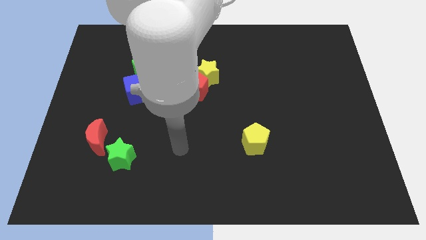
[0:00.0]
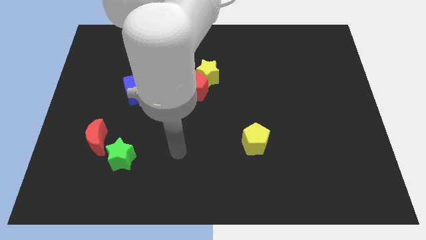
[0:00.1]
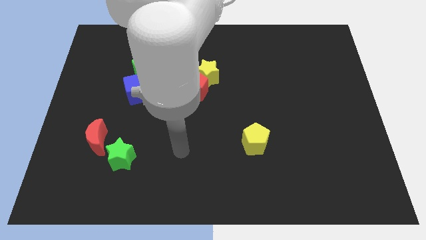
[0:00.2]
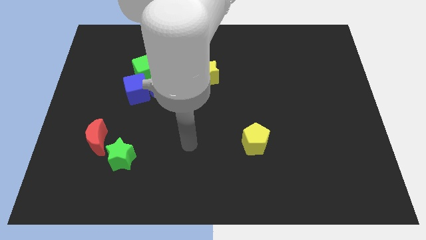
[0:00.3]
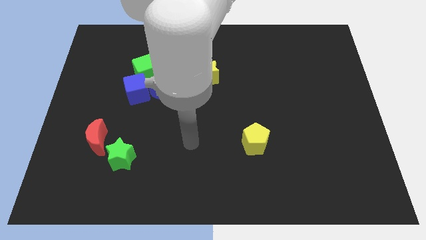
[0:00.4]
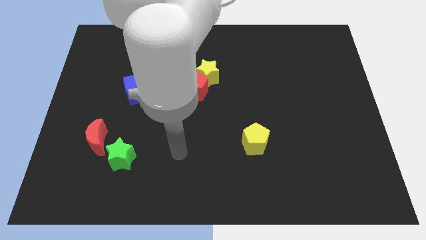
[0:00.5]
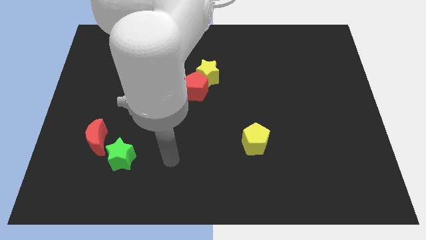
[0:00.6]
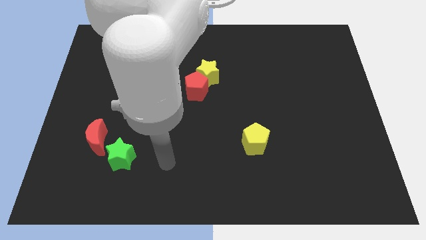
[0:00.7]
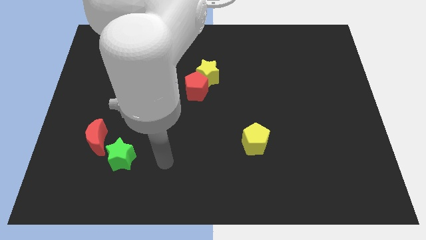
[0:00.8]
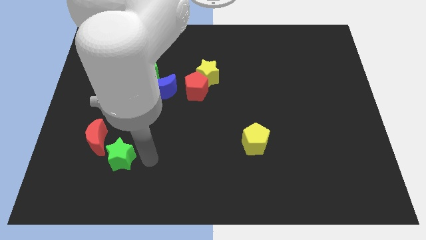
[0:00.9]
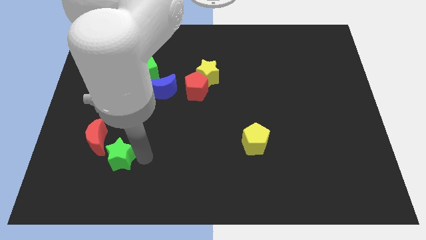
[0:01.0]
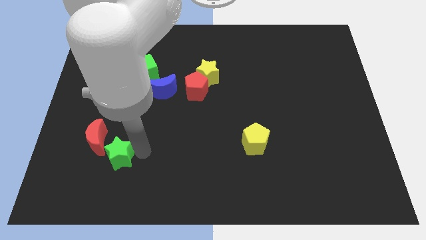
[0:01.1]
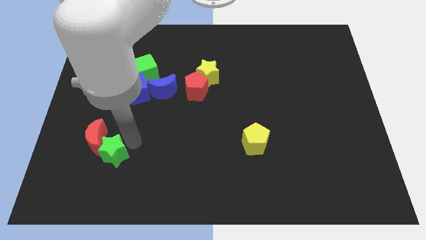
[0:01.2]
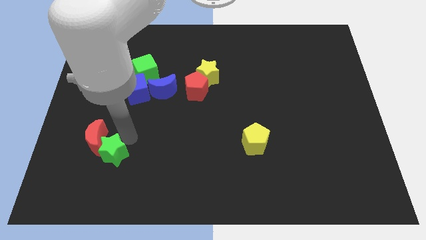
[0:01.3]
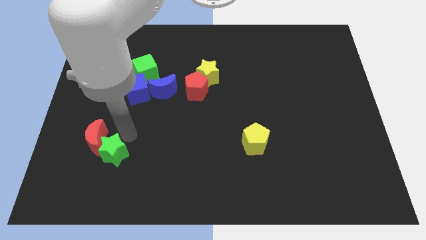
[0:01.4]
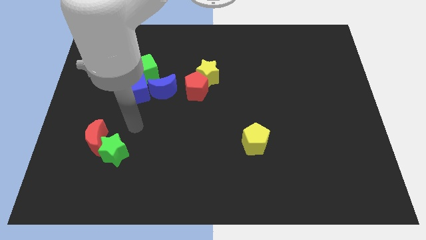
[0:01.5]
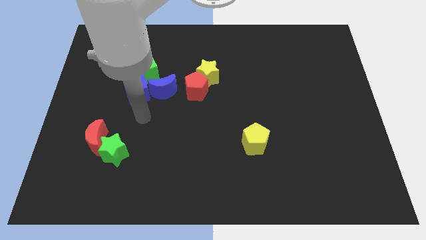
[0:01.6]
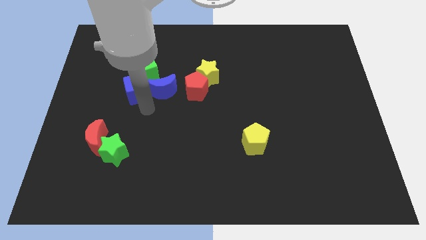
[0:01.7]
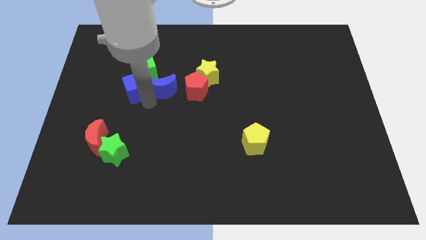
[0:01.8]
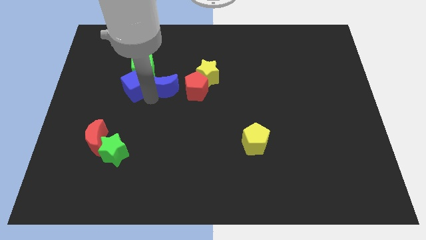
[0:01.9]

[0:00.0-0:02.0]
place the arm below the blue crescent

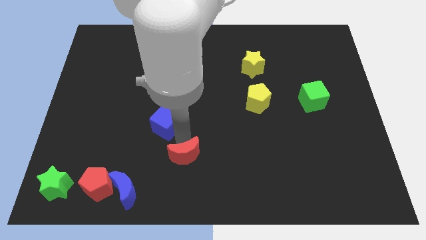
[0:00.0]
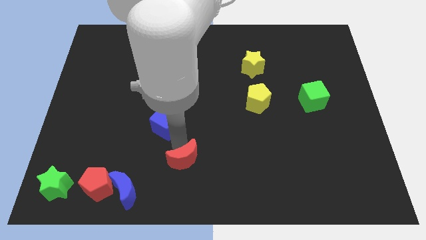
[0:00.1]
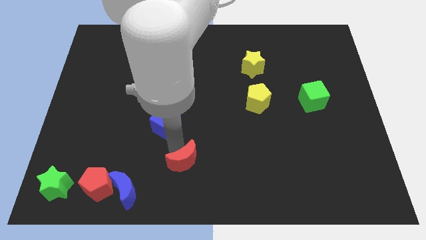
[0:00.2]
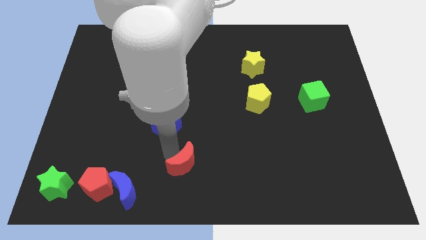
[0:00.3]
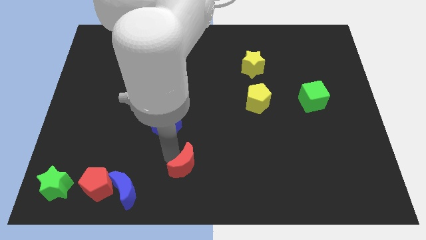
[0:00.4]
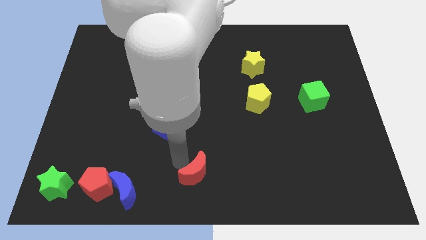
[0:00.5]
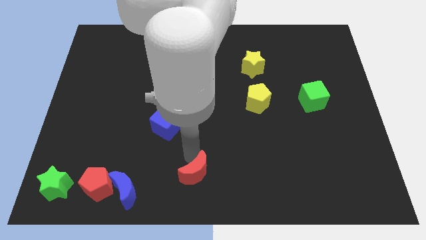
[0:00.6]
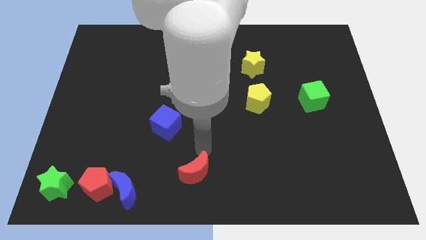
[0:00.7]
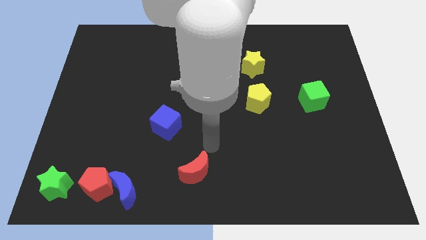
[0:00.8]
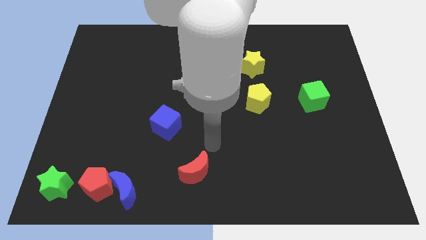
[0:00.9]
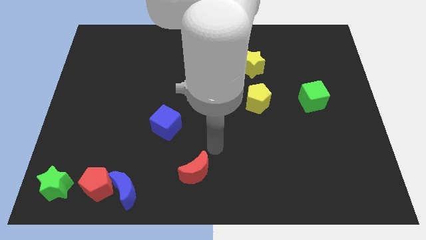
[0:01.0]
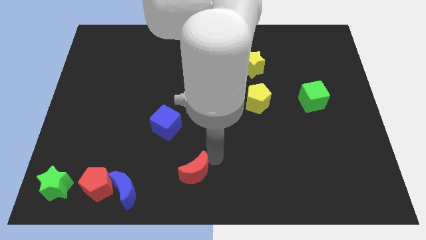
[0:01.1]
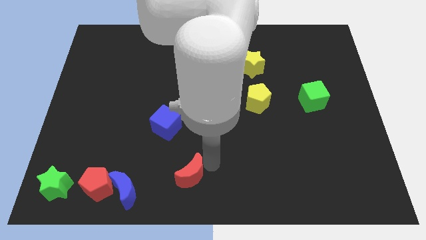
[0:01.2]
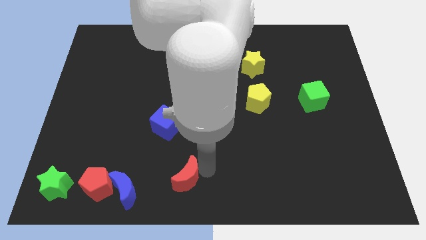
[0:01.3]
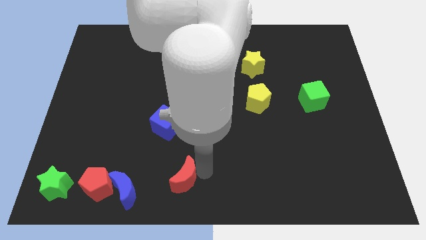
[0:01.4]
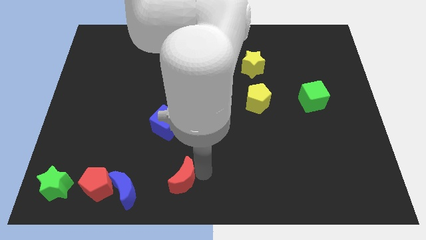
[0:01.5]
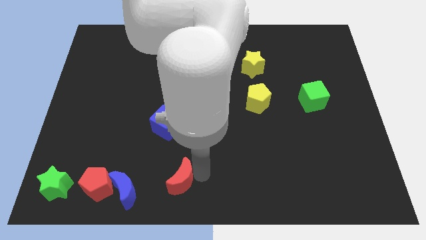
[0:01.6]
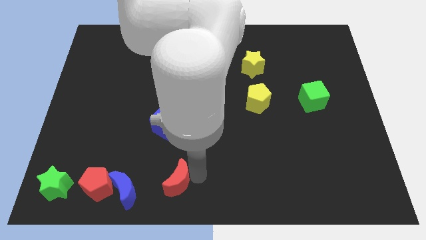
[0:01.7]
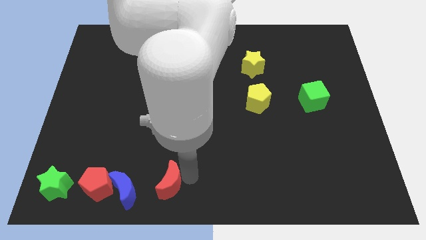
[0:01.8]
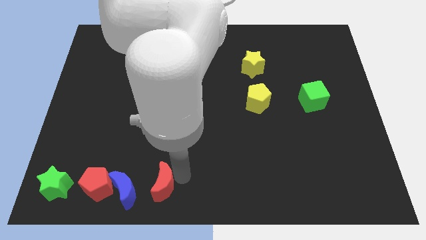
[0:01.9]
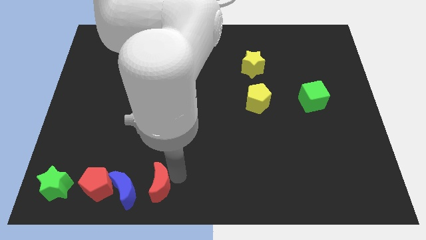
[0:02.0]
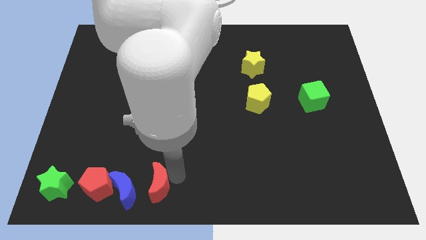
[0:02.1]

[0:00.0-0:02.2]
put the red crescent right to the blue crescent

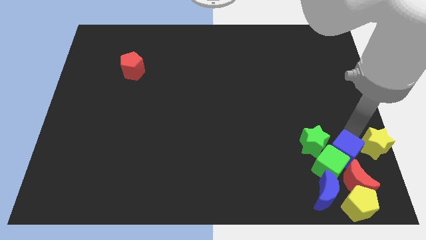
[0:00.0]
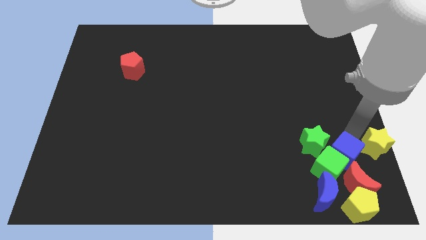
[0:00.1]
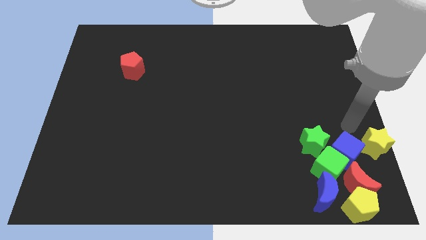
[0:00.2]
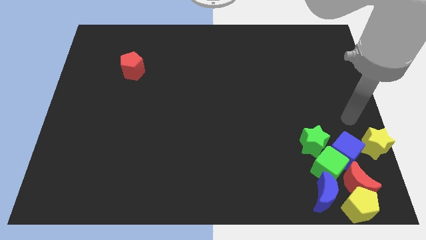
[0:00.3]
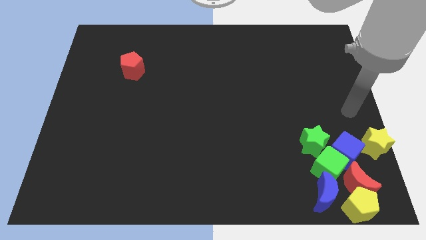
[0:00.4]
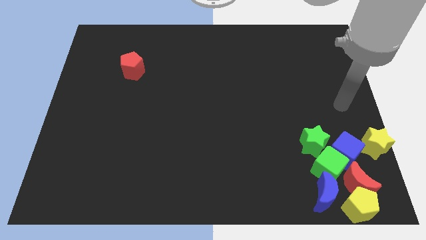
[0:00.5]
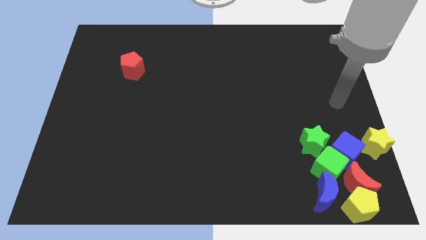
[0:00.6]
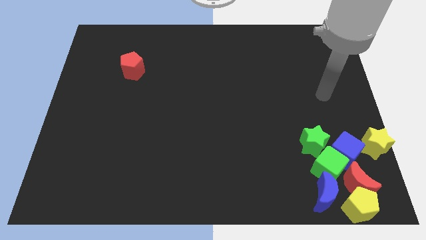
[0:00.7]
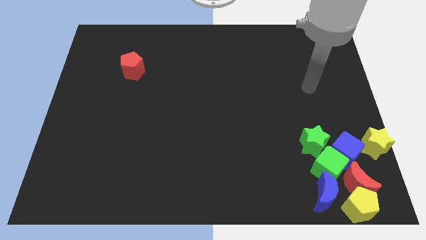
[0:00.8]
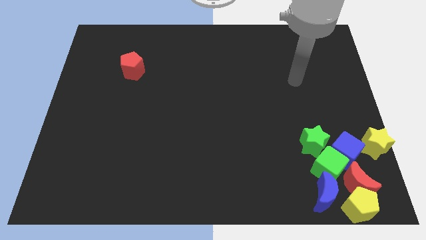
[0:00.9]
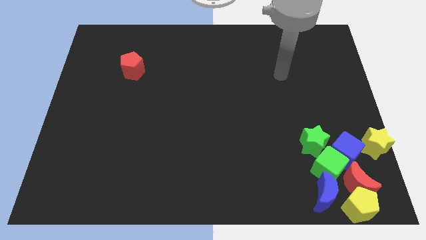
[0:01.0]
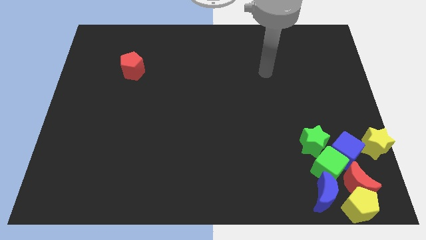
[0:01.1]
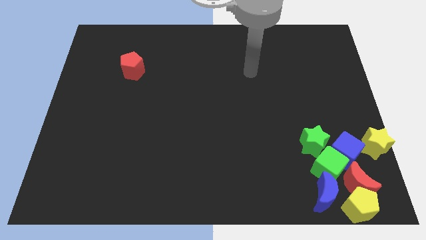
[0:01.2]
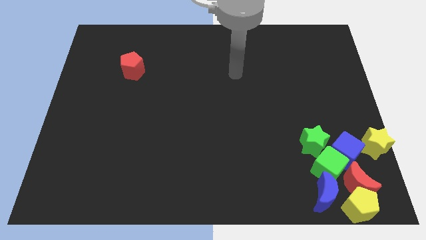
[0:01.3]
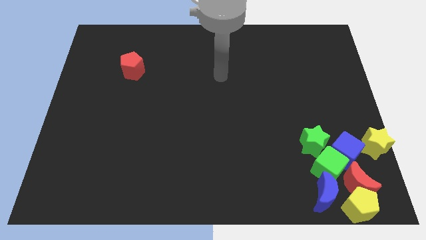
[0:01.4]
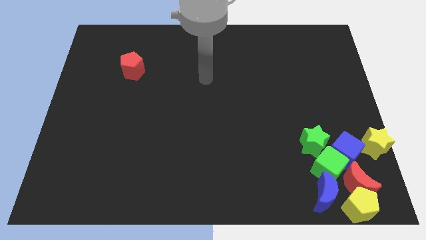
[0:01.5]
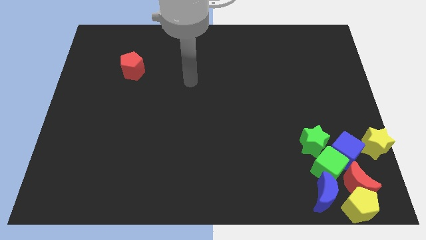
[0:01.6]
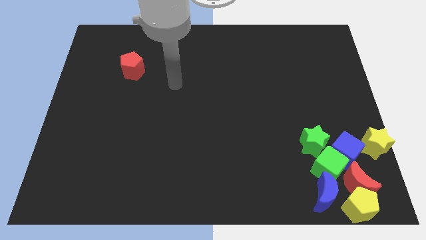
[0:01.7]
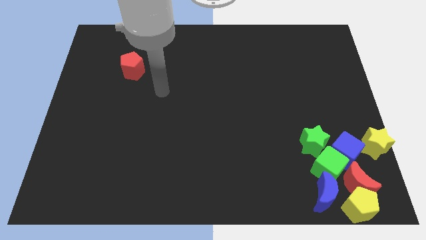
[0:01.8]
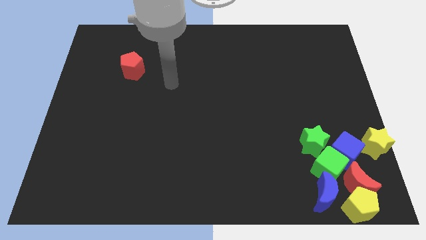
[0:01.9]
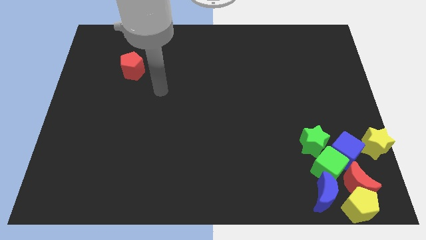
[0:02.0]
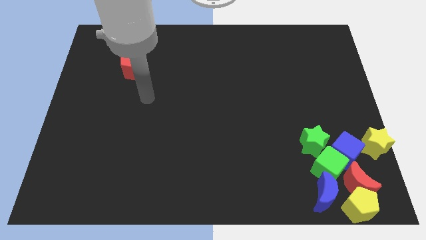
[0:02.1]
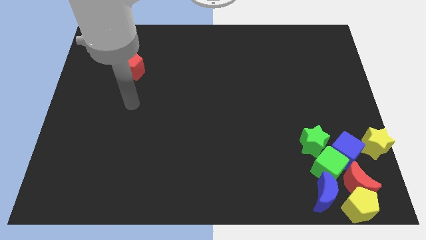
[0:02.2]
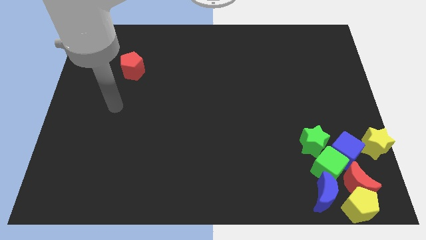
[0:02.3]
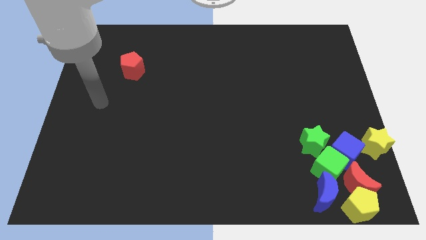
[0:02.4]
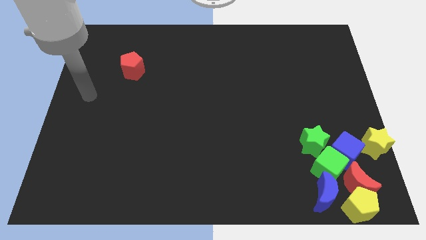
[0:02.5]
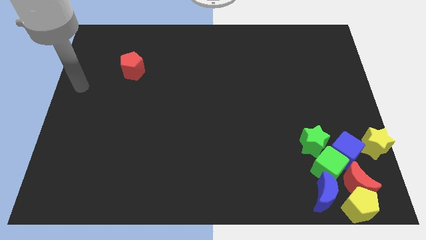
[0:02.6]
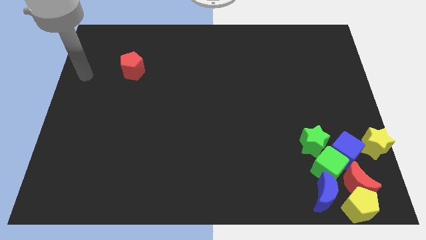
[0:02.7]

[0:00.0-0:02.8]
move your arm away from the blue cube

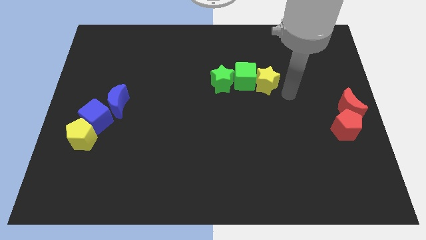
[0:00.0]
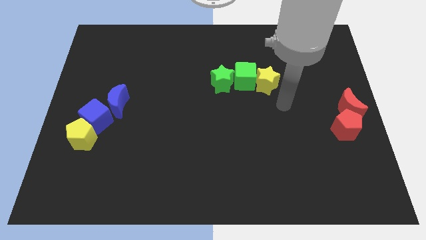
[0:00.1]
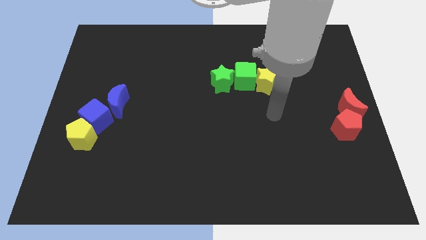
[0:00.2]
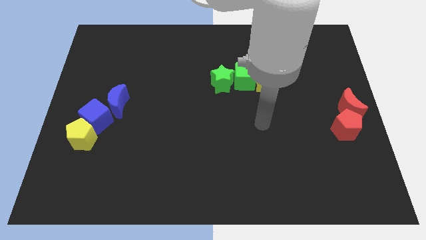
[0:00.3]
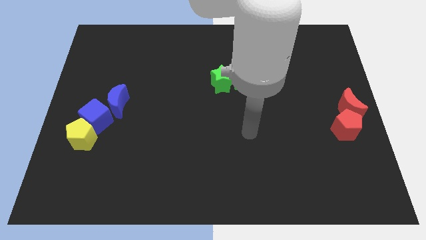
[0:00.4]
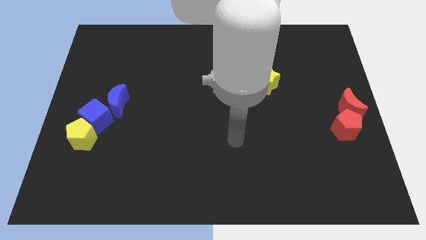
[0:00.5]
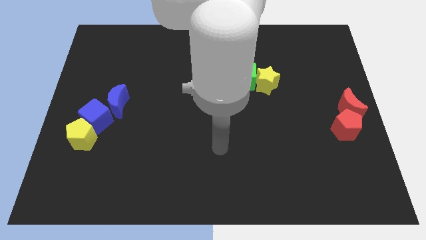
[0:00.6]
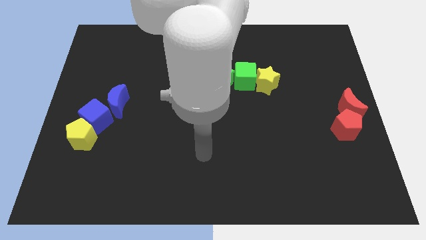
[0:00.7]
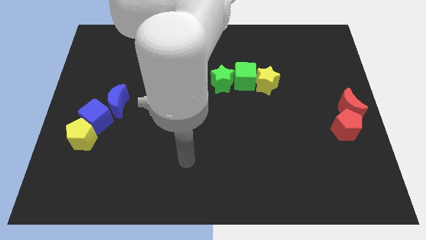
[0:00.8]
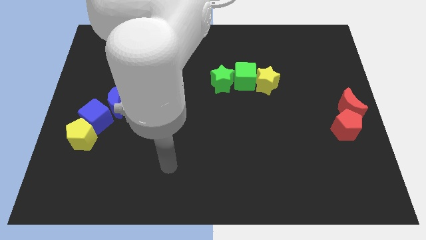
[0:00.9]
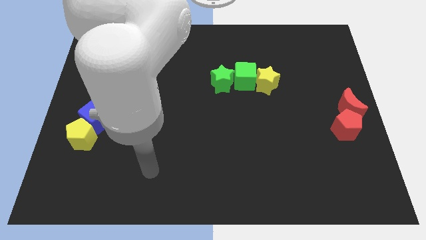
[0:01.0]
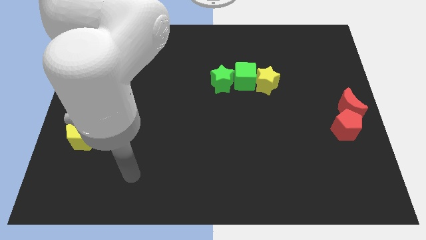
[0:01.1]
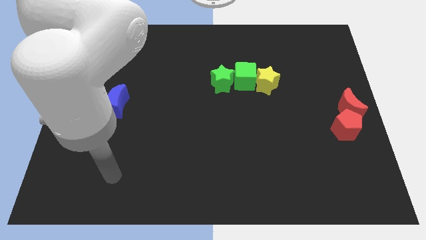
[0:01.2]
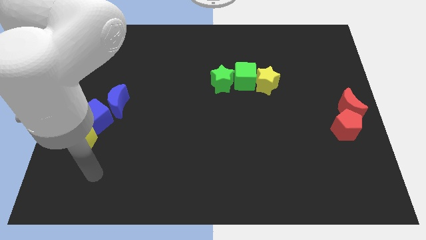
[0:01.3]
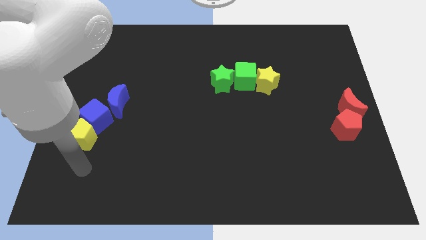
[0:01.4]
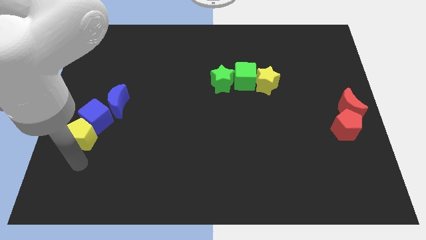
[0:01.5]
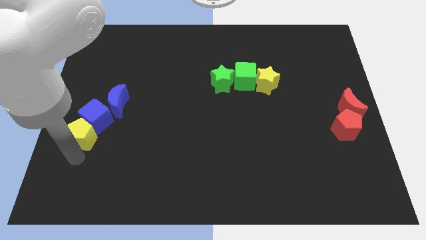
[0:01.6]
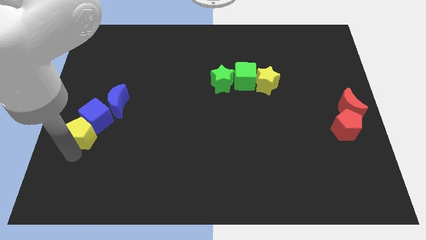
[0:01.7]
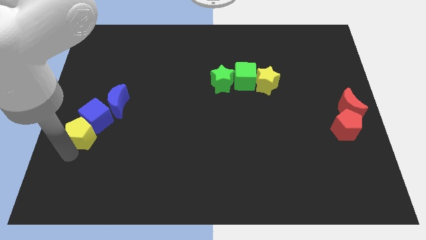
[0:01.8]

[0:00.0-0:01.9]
touch the yellow pentagon with your arm
